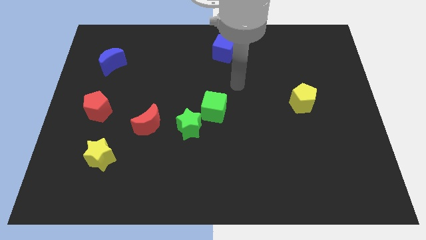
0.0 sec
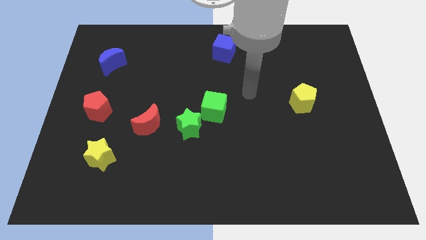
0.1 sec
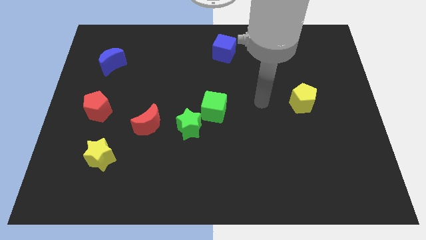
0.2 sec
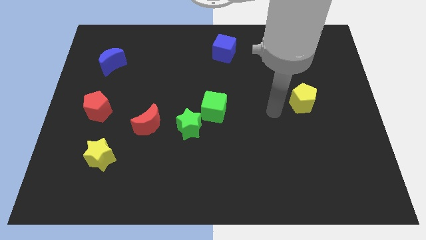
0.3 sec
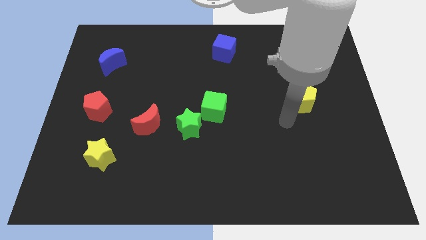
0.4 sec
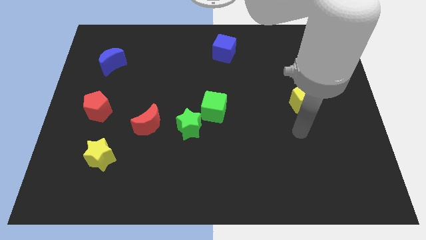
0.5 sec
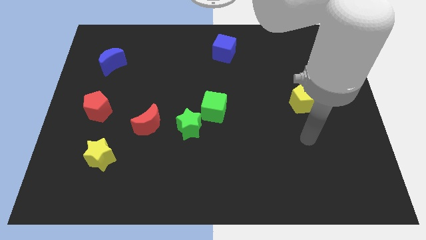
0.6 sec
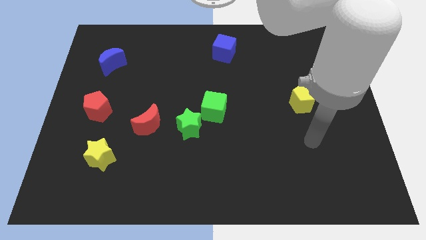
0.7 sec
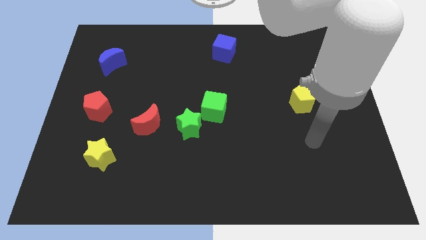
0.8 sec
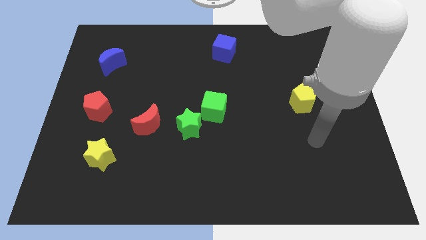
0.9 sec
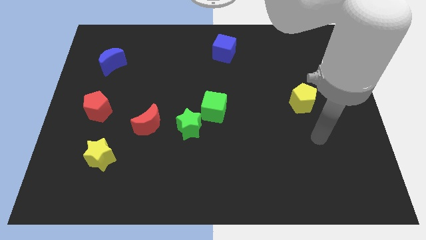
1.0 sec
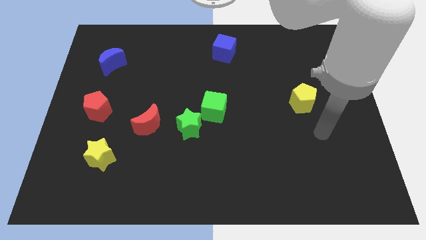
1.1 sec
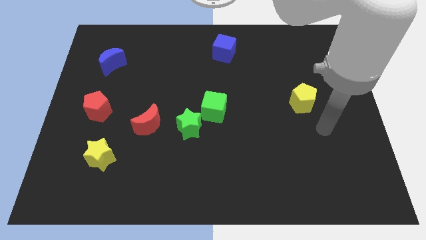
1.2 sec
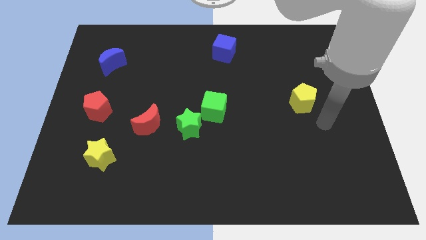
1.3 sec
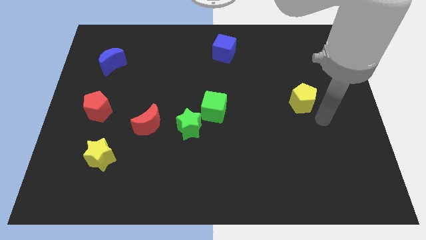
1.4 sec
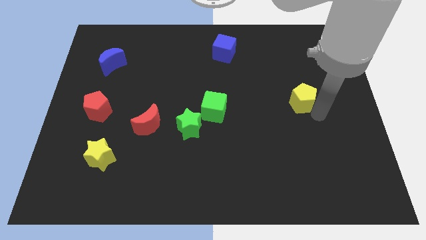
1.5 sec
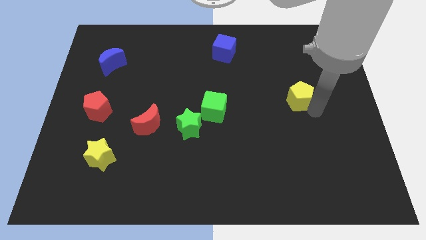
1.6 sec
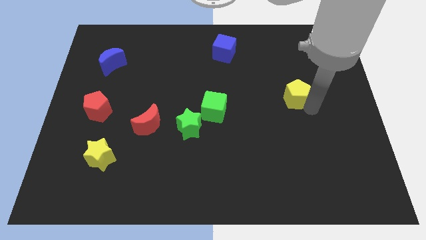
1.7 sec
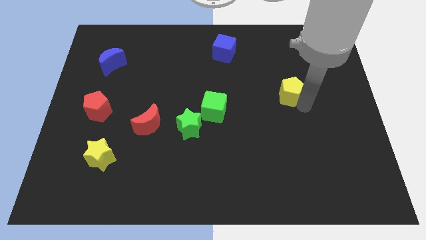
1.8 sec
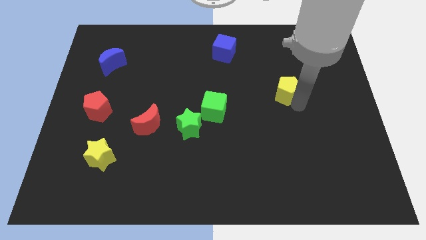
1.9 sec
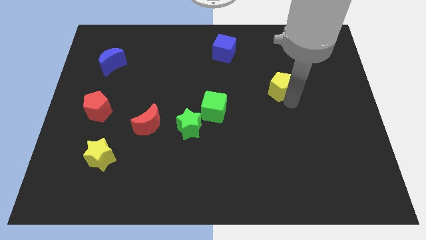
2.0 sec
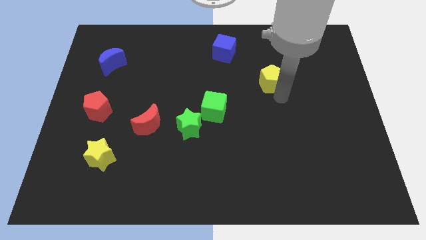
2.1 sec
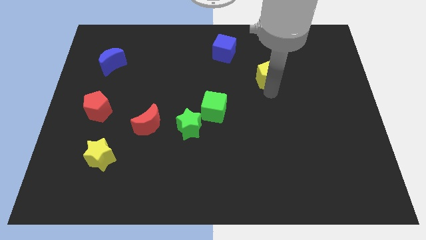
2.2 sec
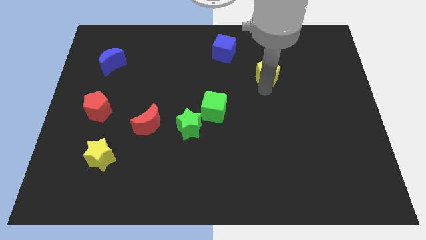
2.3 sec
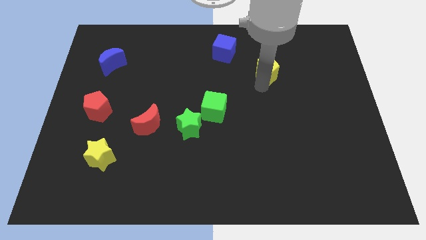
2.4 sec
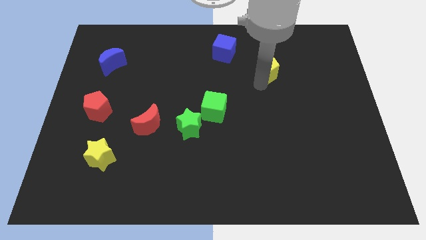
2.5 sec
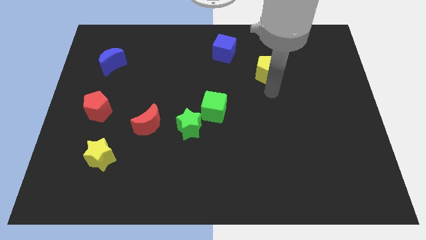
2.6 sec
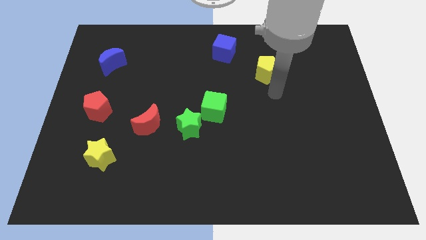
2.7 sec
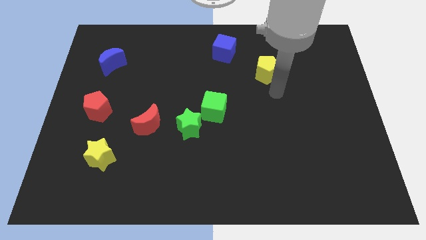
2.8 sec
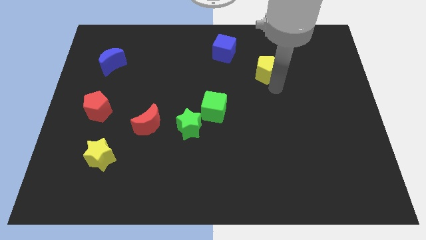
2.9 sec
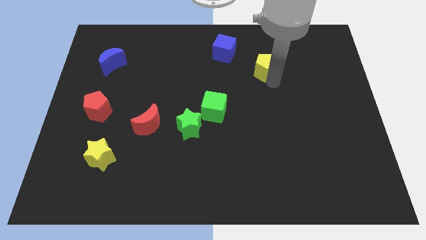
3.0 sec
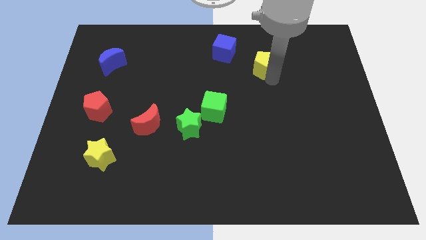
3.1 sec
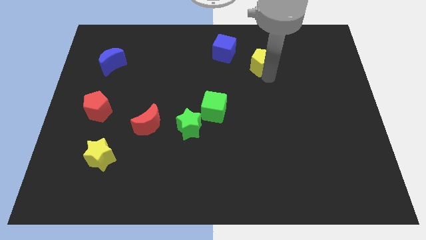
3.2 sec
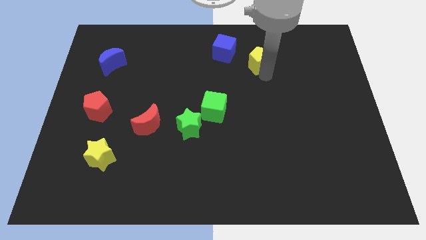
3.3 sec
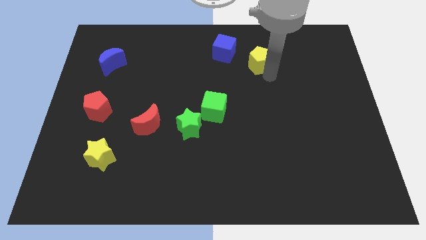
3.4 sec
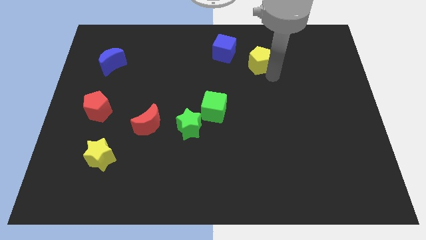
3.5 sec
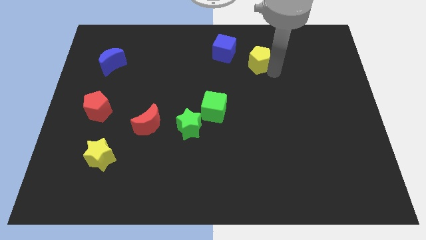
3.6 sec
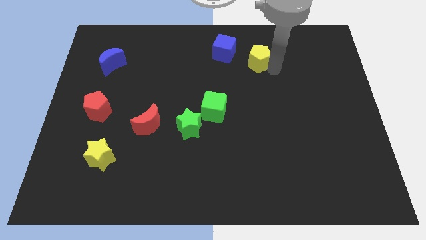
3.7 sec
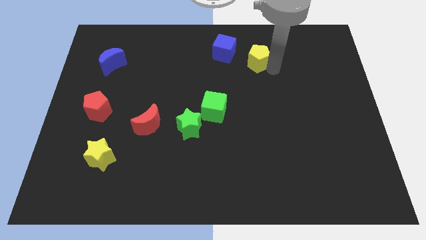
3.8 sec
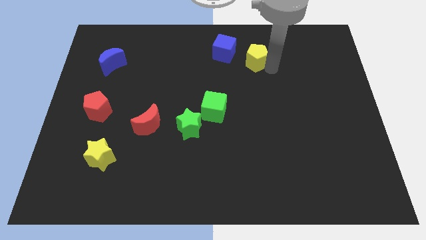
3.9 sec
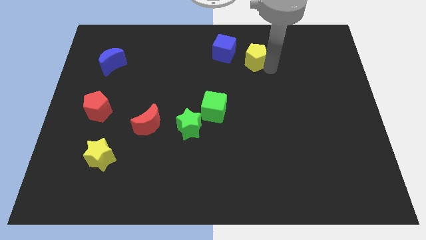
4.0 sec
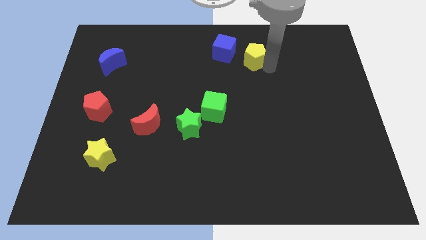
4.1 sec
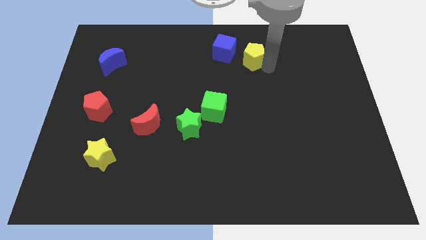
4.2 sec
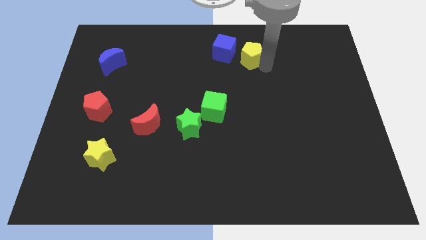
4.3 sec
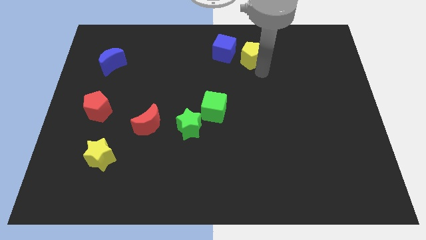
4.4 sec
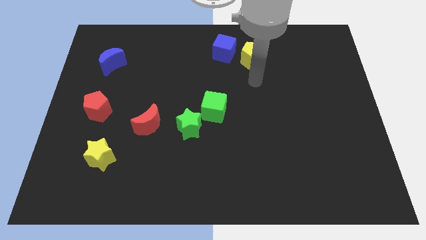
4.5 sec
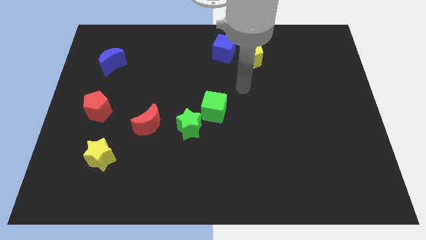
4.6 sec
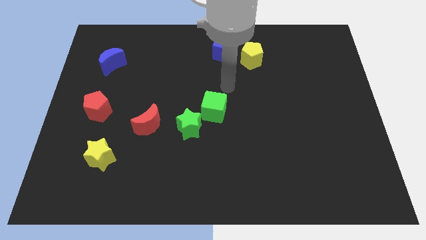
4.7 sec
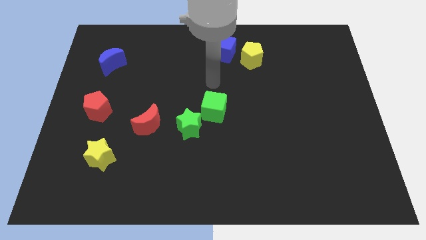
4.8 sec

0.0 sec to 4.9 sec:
move the yellow pentagon to the right of the blue cube

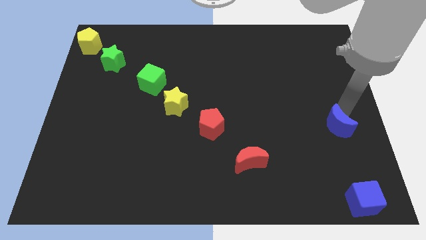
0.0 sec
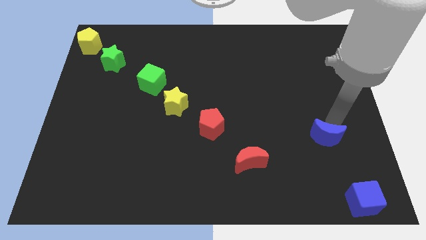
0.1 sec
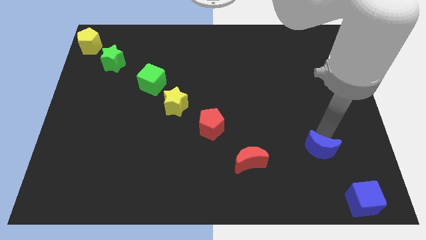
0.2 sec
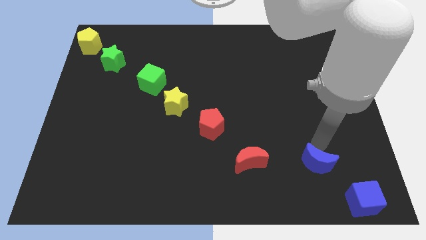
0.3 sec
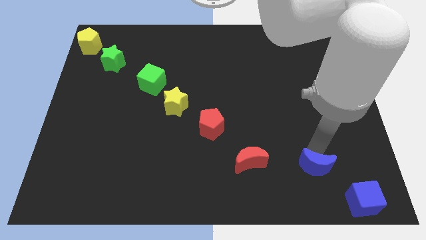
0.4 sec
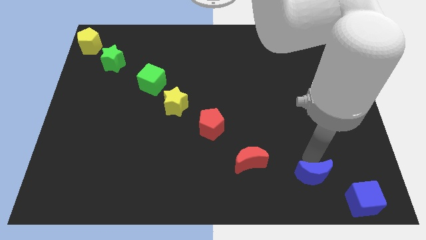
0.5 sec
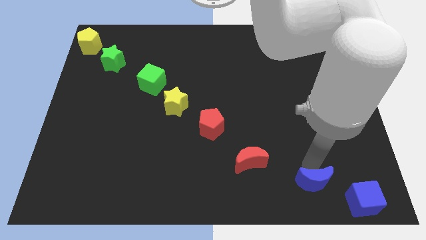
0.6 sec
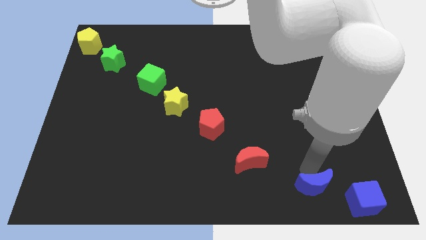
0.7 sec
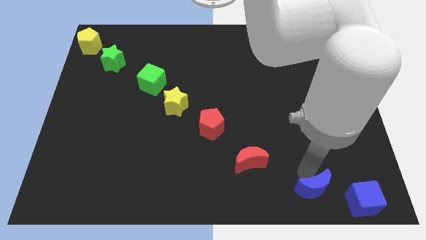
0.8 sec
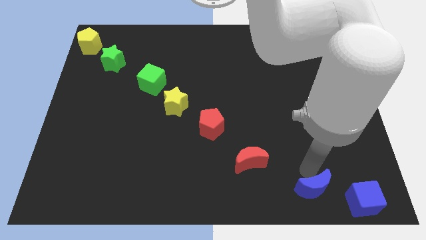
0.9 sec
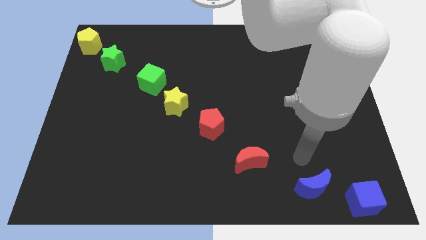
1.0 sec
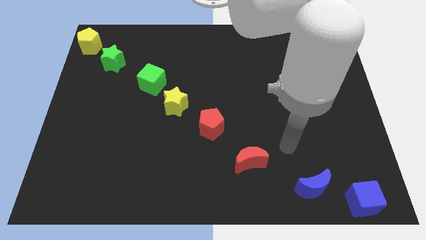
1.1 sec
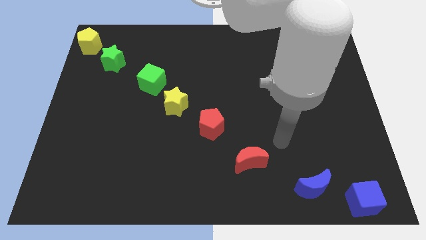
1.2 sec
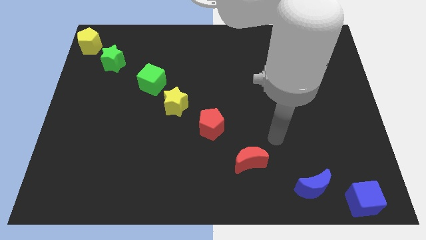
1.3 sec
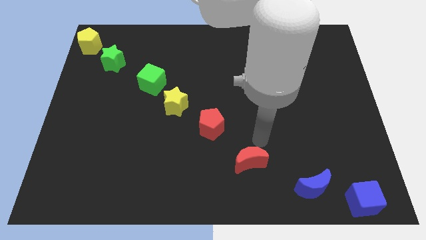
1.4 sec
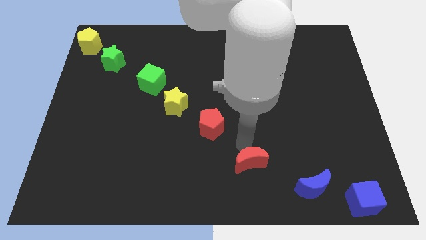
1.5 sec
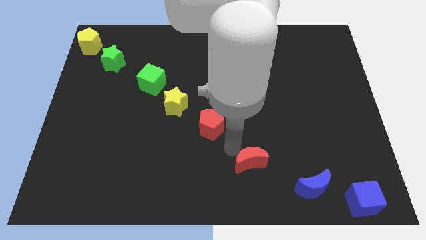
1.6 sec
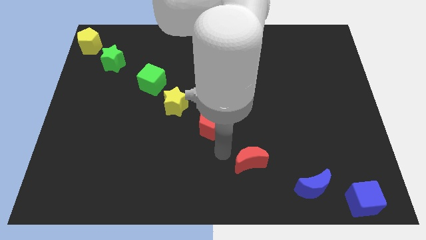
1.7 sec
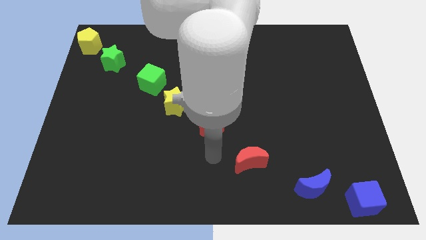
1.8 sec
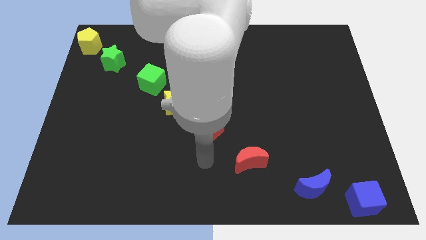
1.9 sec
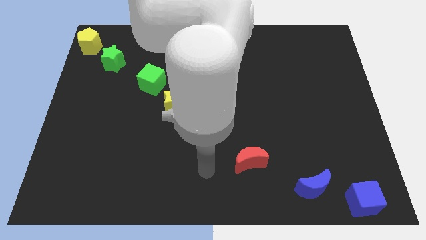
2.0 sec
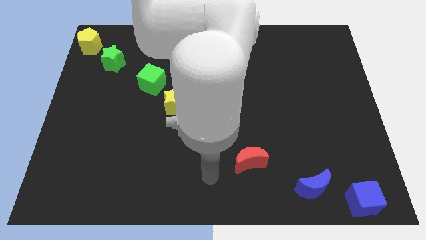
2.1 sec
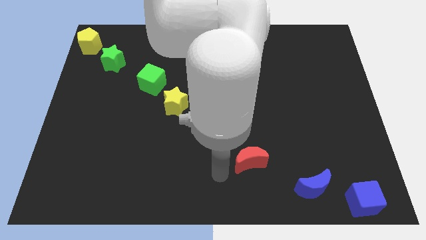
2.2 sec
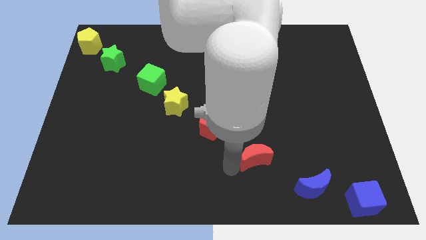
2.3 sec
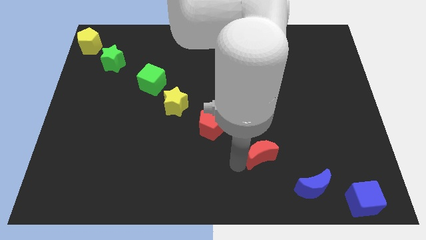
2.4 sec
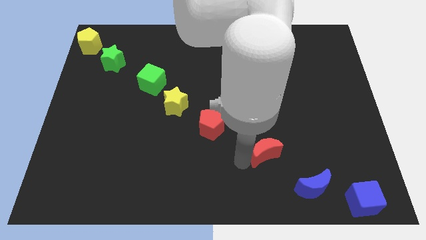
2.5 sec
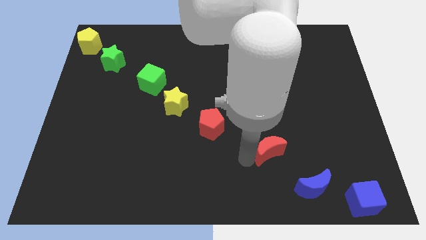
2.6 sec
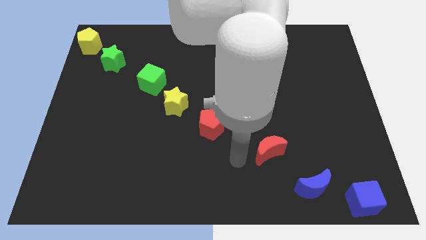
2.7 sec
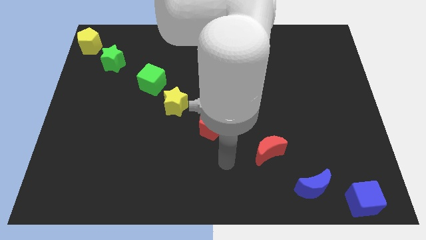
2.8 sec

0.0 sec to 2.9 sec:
move red moon and blue moon diagonal to each other

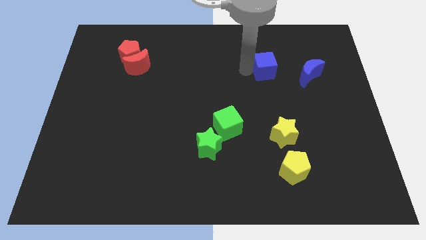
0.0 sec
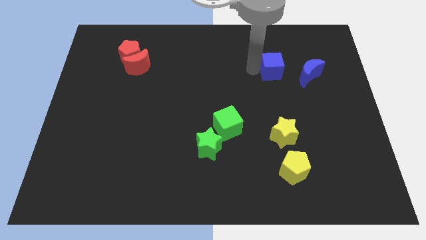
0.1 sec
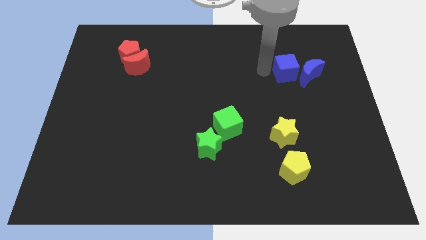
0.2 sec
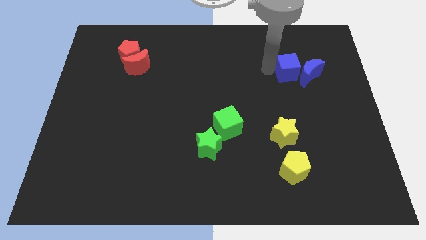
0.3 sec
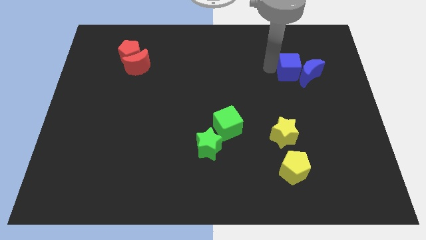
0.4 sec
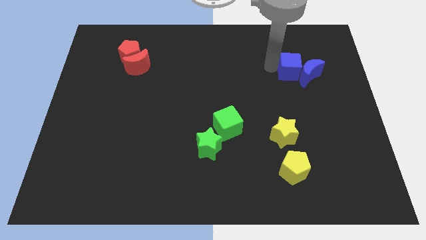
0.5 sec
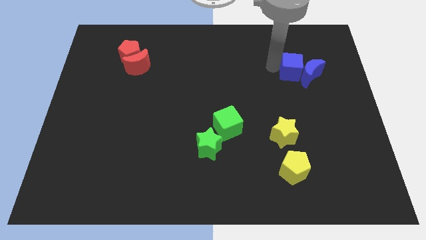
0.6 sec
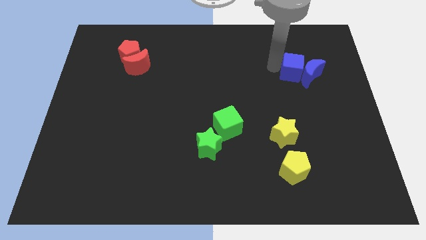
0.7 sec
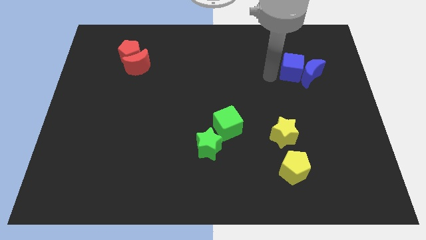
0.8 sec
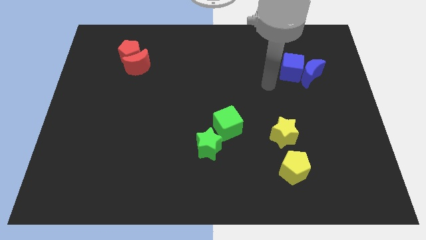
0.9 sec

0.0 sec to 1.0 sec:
push the blue cube into the blue moon

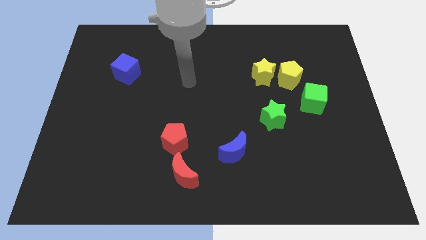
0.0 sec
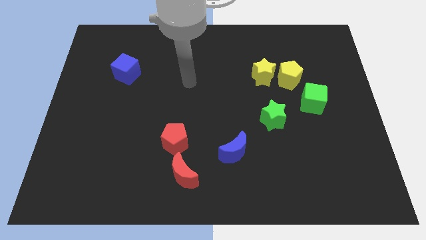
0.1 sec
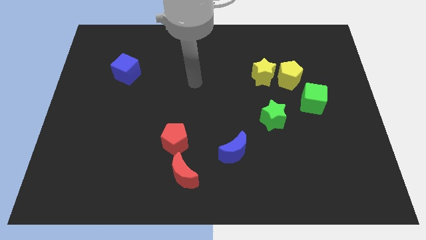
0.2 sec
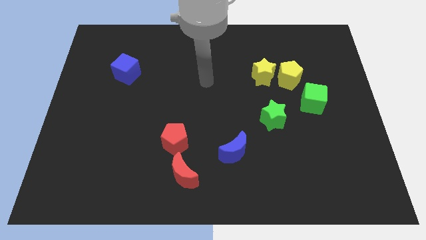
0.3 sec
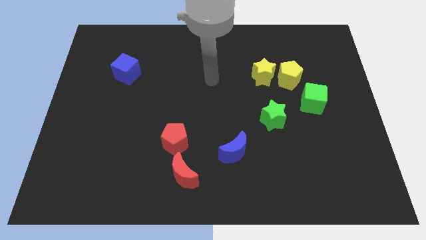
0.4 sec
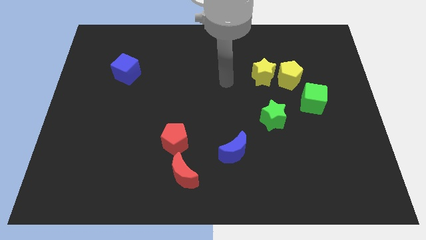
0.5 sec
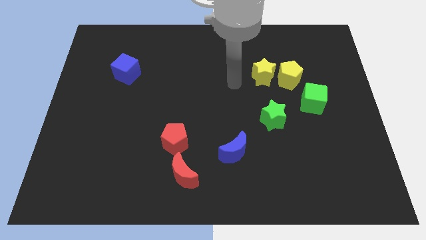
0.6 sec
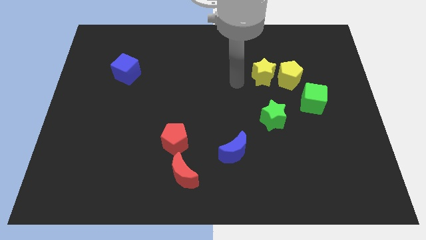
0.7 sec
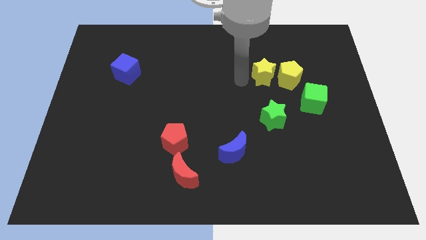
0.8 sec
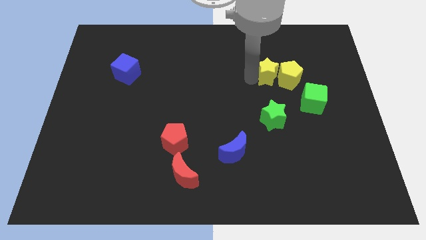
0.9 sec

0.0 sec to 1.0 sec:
move the arm right to the yellow star
